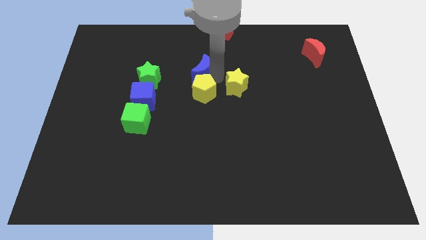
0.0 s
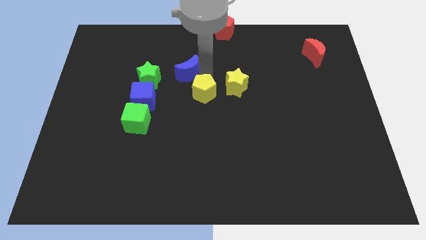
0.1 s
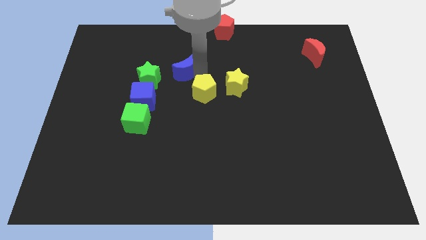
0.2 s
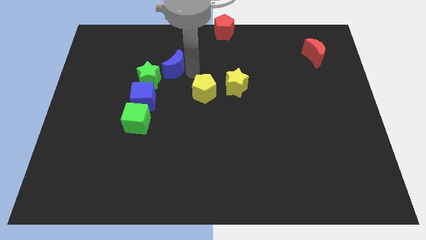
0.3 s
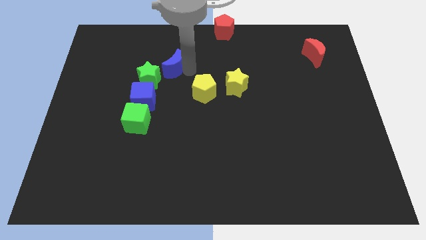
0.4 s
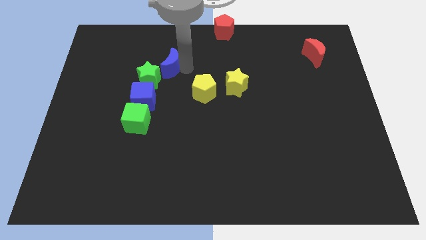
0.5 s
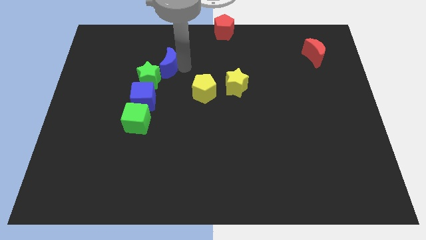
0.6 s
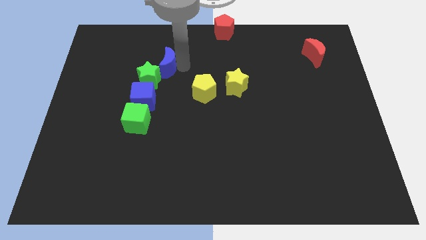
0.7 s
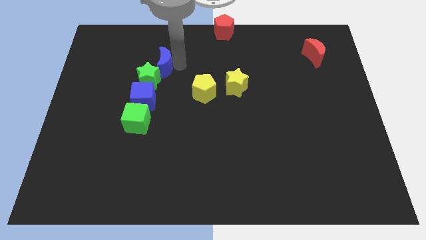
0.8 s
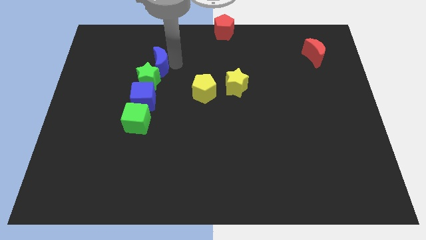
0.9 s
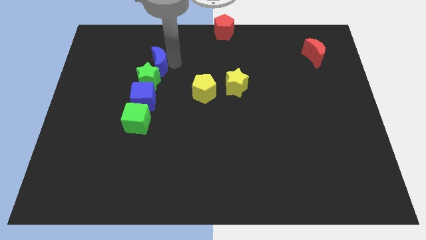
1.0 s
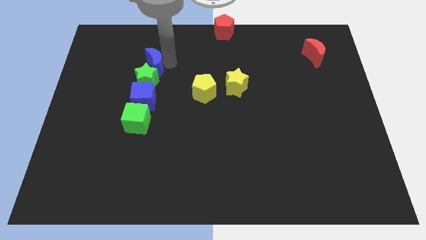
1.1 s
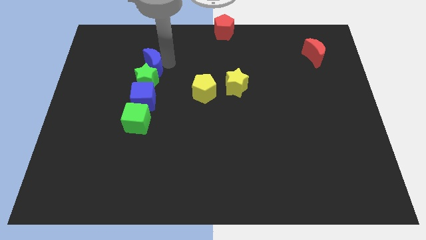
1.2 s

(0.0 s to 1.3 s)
separate the blue crescent from the yellow pentagon

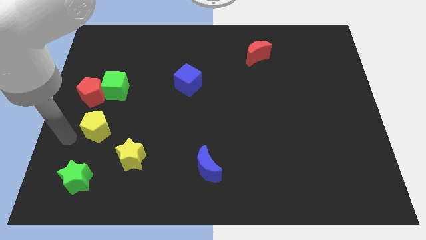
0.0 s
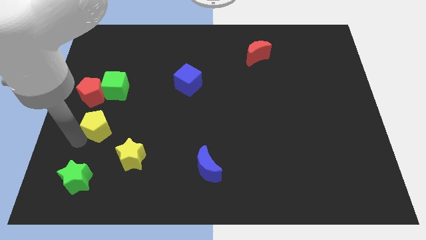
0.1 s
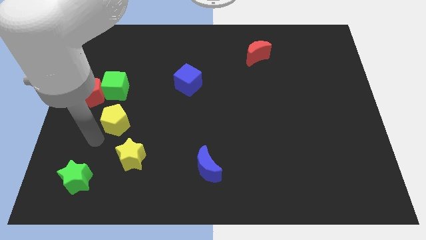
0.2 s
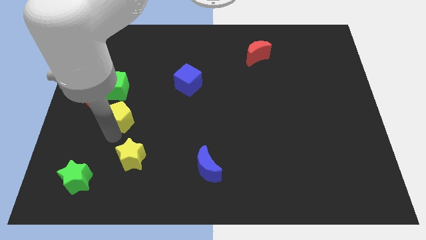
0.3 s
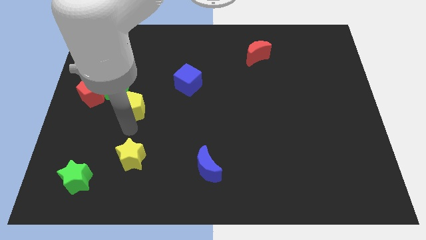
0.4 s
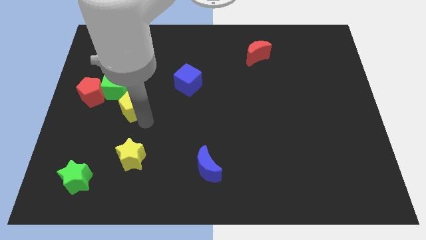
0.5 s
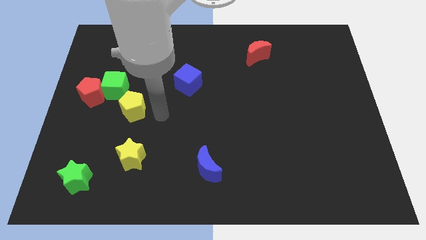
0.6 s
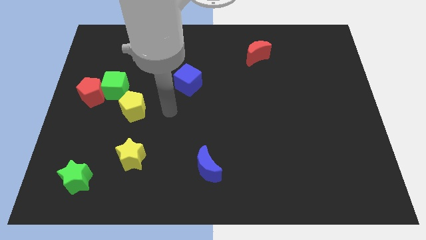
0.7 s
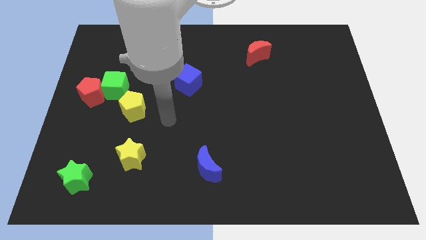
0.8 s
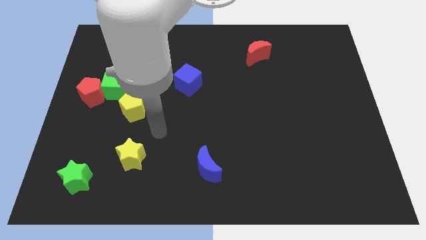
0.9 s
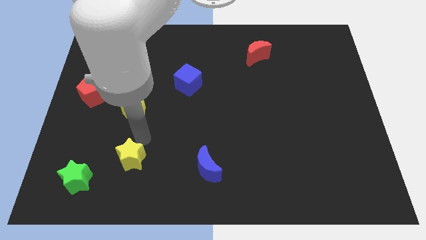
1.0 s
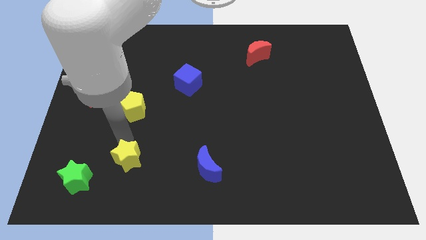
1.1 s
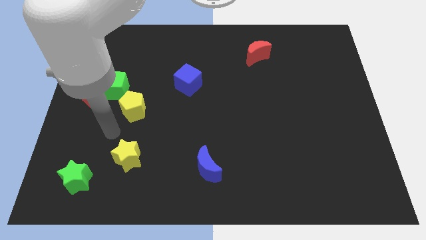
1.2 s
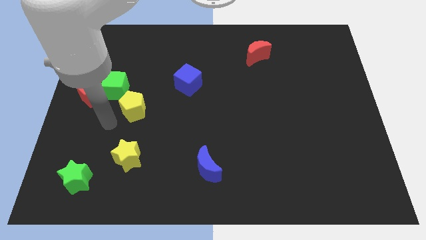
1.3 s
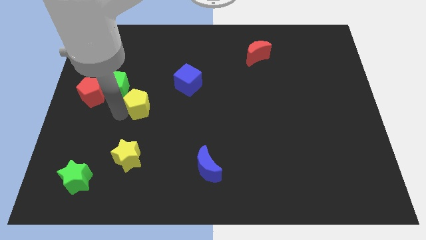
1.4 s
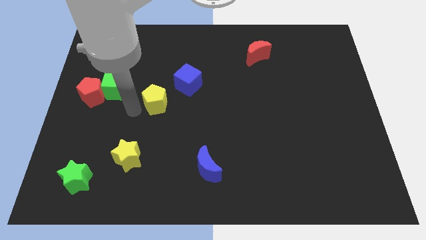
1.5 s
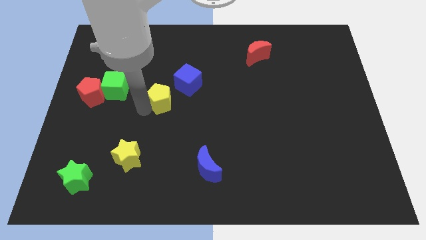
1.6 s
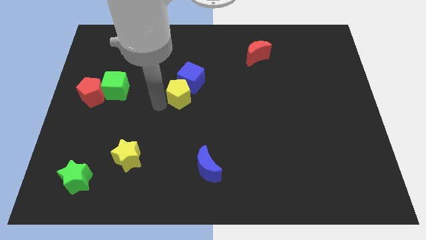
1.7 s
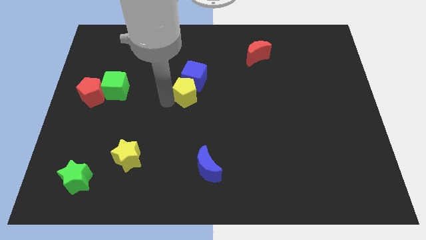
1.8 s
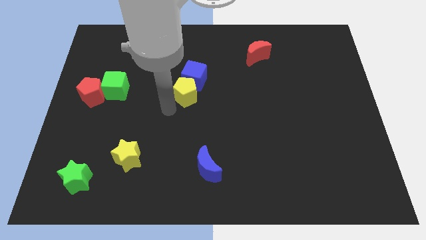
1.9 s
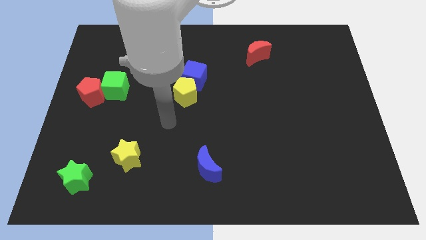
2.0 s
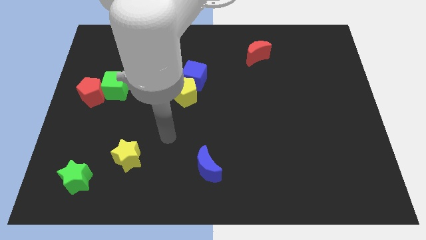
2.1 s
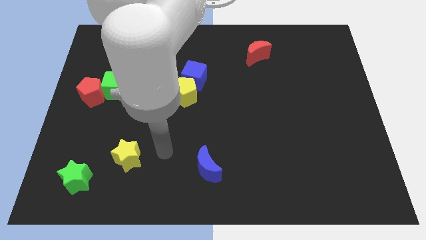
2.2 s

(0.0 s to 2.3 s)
slide the yellow pentagon into the blue cube

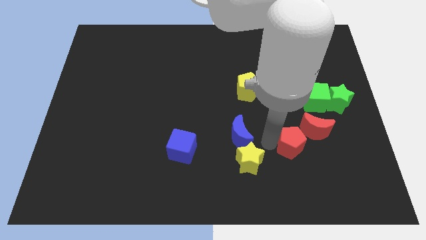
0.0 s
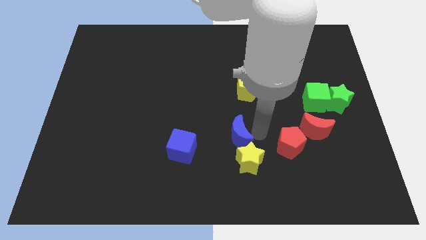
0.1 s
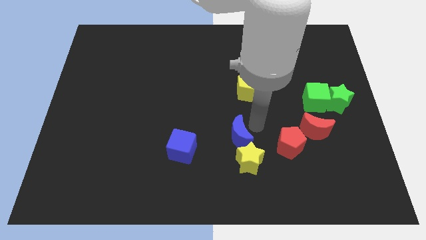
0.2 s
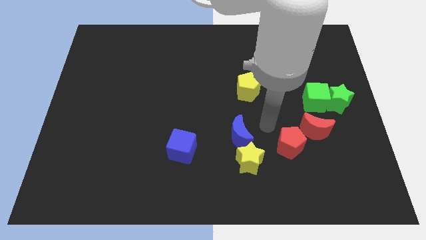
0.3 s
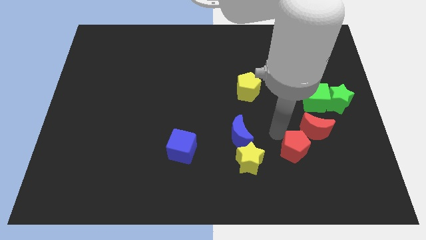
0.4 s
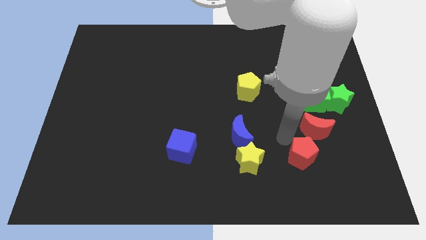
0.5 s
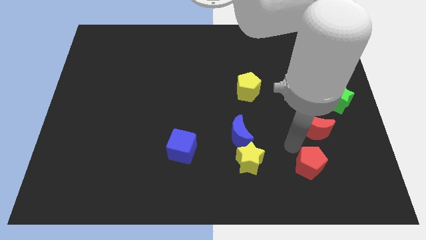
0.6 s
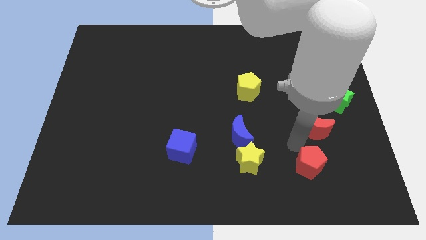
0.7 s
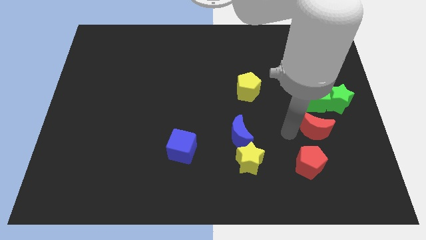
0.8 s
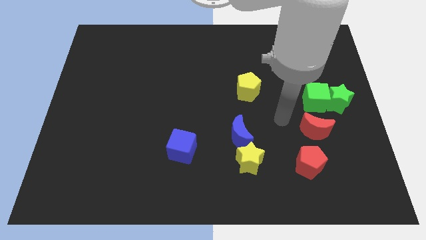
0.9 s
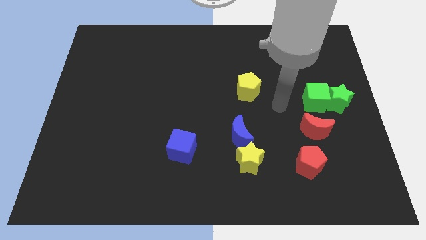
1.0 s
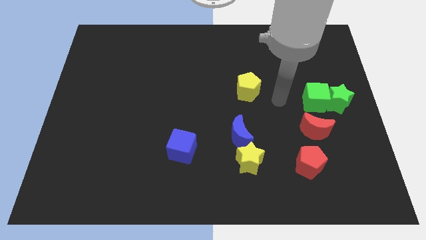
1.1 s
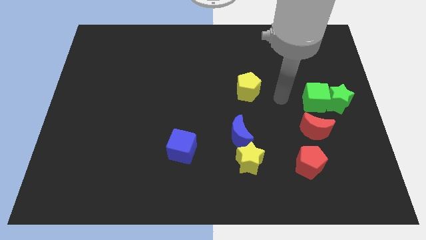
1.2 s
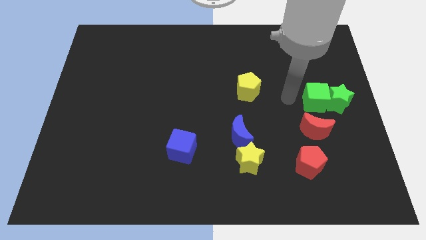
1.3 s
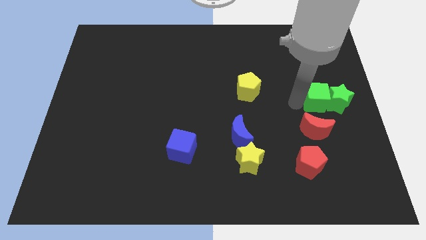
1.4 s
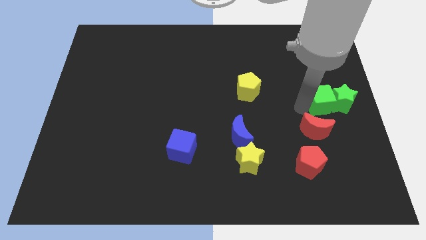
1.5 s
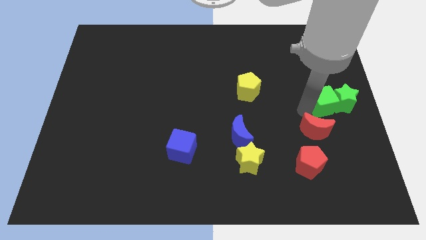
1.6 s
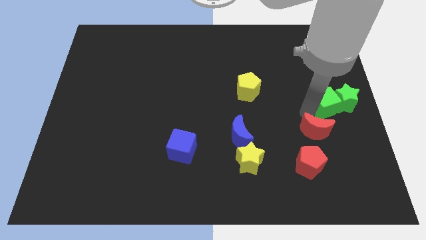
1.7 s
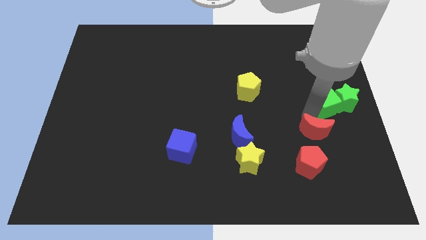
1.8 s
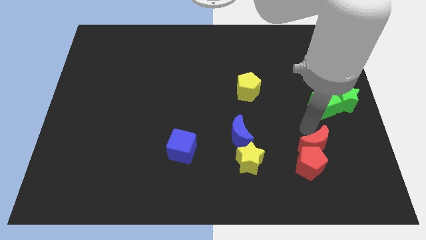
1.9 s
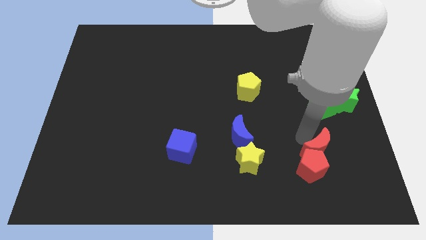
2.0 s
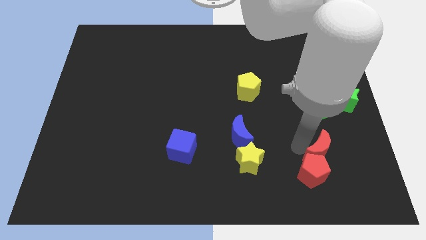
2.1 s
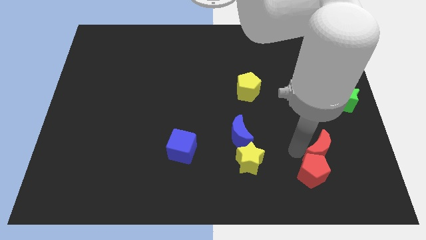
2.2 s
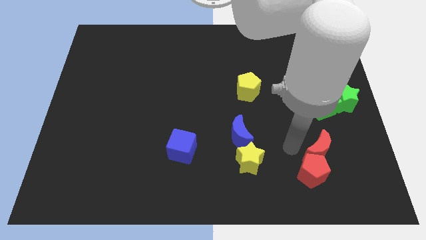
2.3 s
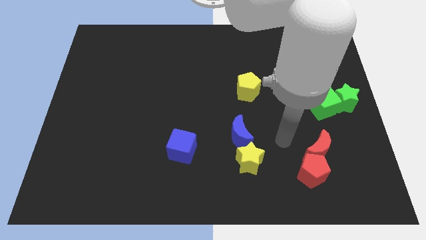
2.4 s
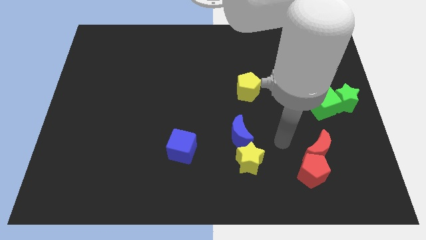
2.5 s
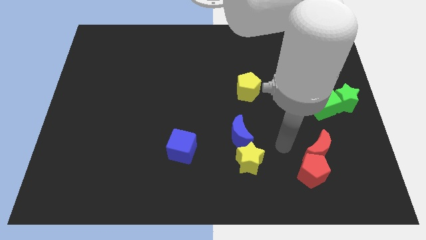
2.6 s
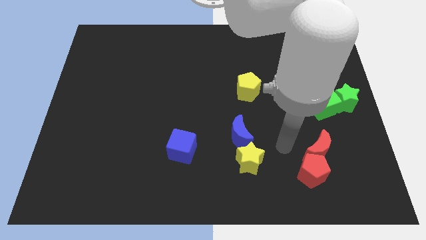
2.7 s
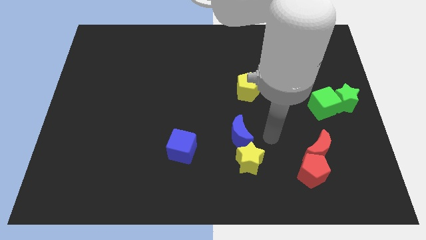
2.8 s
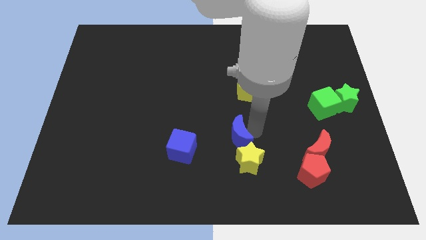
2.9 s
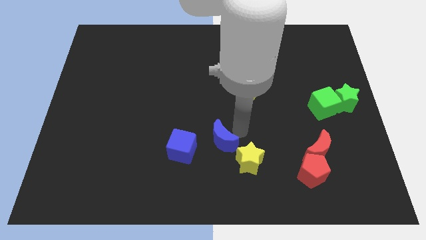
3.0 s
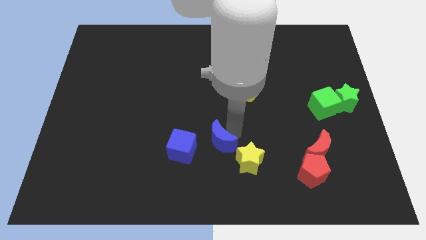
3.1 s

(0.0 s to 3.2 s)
move the red pentagon and red moon to the right of the yellow star

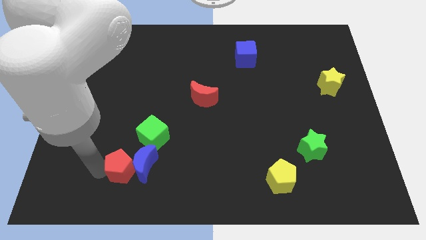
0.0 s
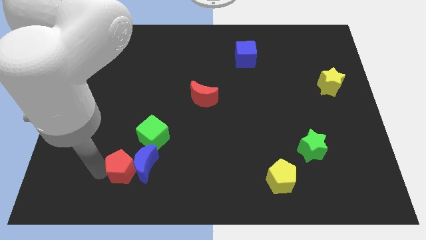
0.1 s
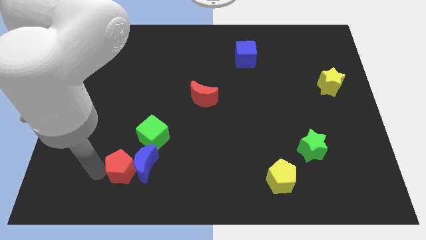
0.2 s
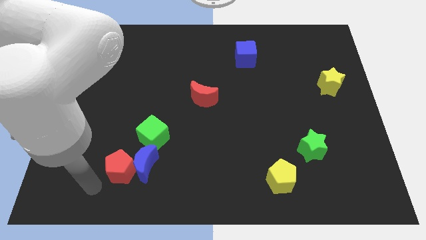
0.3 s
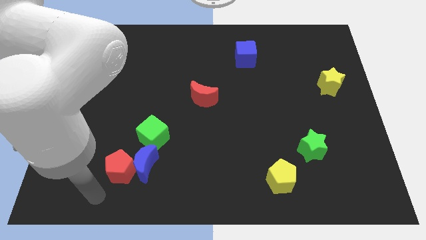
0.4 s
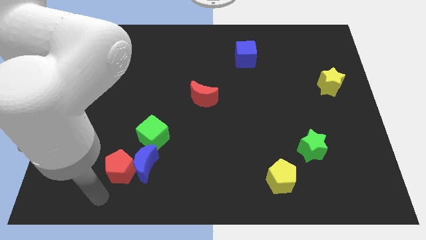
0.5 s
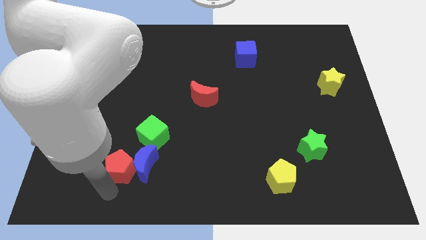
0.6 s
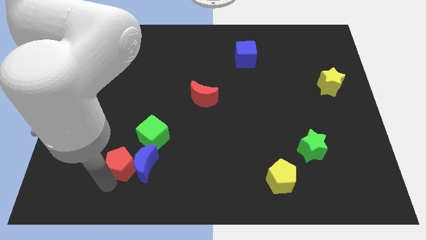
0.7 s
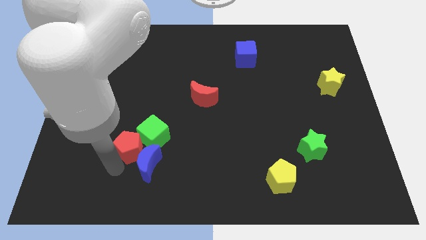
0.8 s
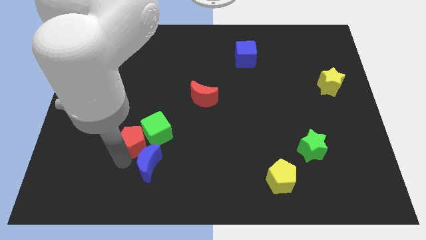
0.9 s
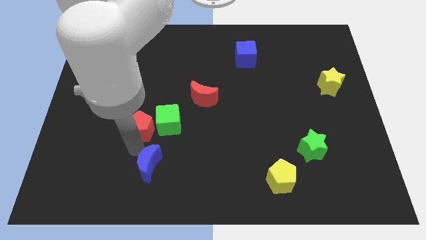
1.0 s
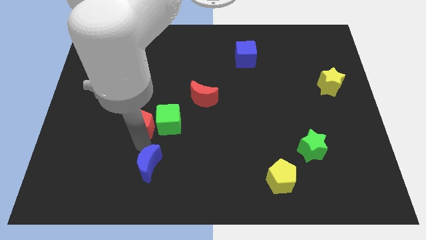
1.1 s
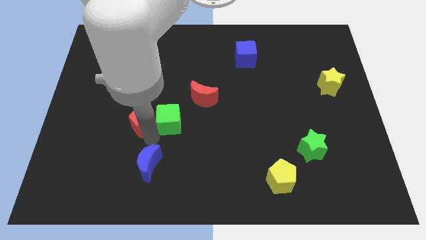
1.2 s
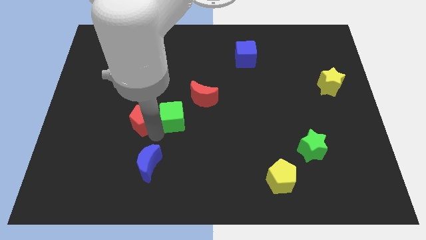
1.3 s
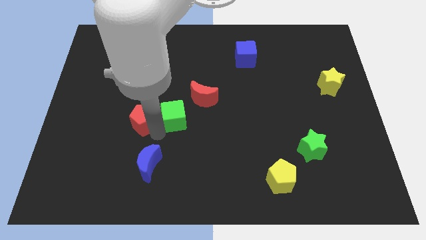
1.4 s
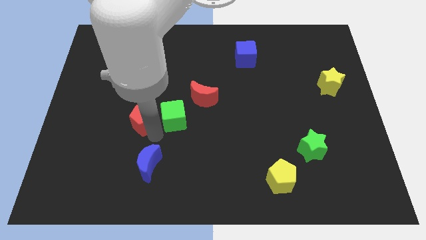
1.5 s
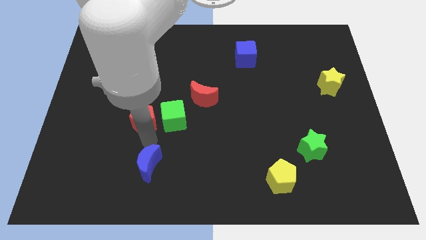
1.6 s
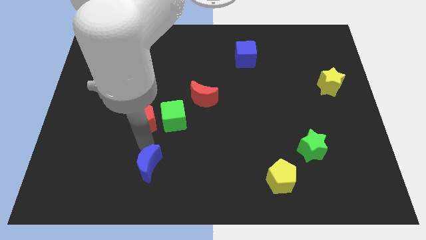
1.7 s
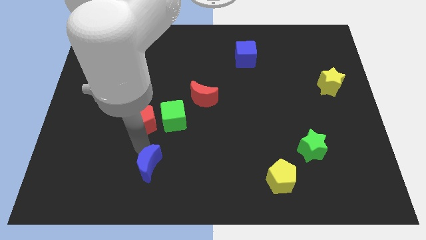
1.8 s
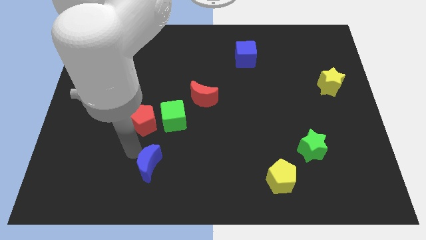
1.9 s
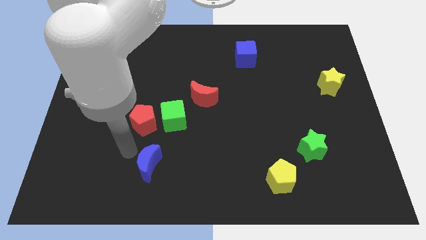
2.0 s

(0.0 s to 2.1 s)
slide the red pentagon and green cube to the center
